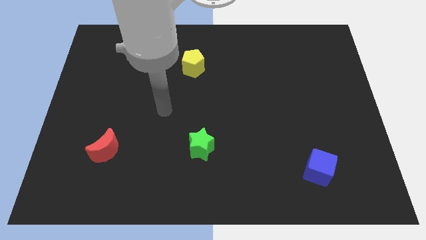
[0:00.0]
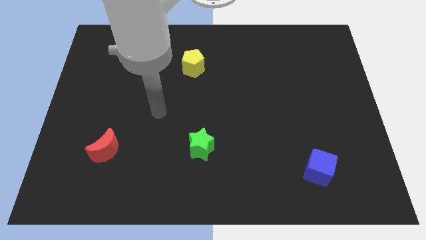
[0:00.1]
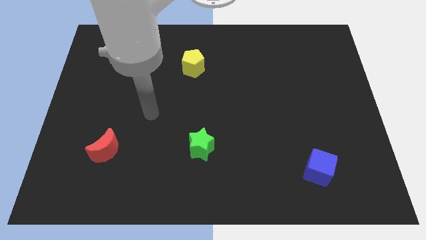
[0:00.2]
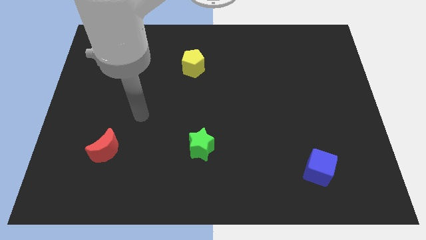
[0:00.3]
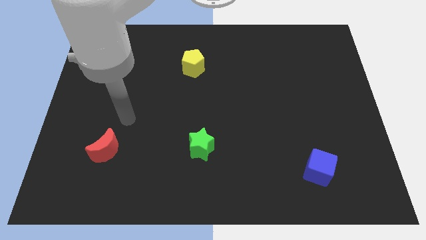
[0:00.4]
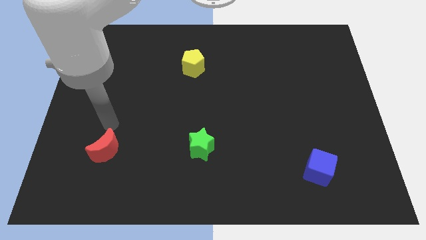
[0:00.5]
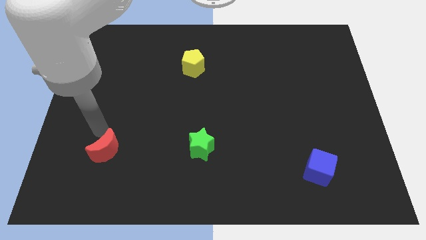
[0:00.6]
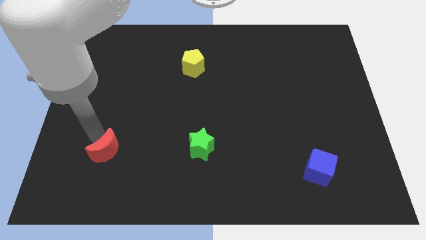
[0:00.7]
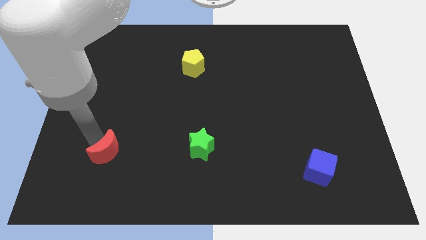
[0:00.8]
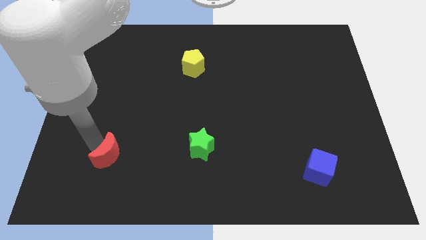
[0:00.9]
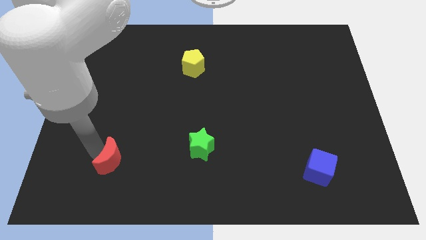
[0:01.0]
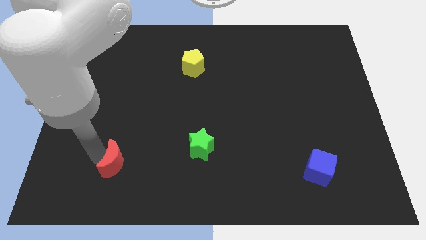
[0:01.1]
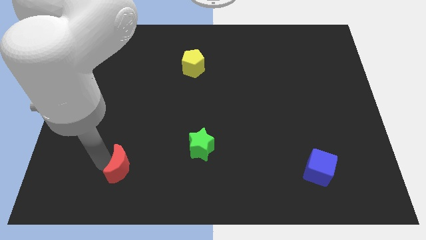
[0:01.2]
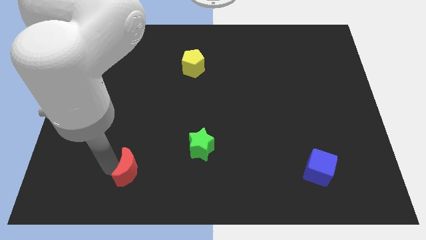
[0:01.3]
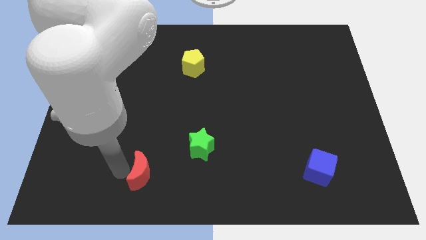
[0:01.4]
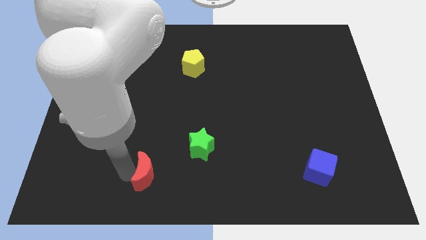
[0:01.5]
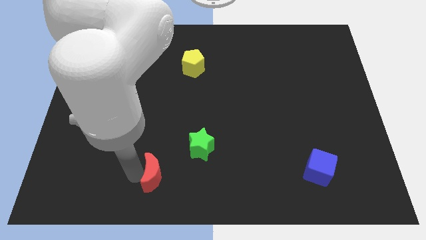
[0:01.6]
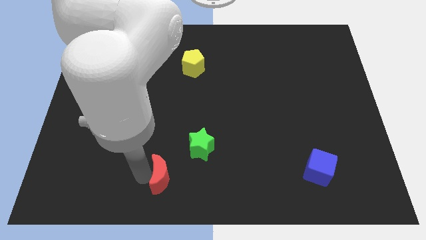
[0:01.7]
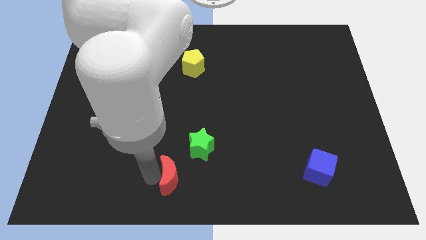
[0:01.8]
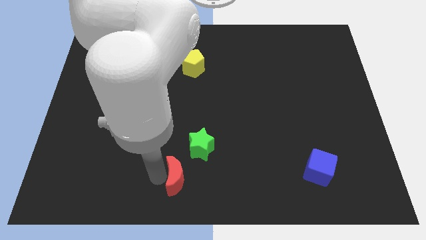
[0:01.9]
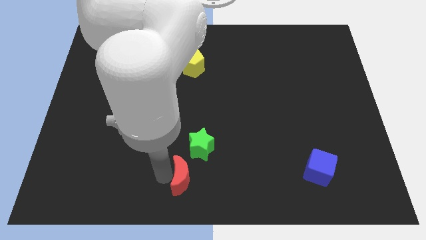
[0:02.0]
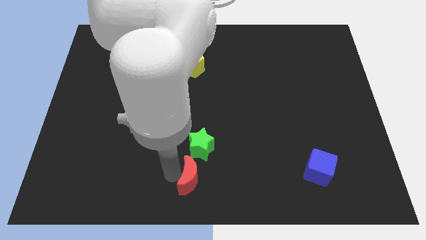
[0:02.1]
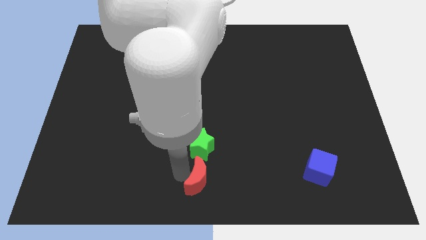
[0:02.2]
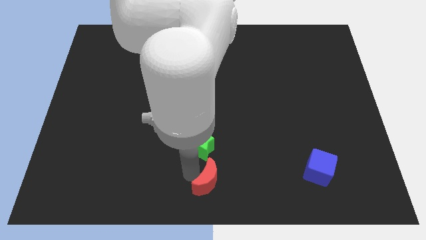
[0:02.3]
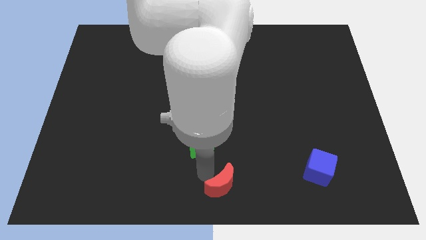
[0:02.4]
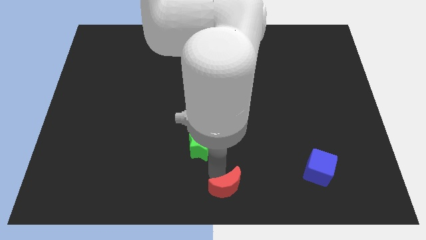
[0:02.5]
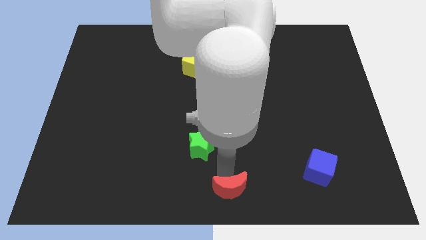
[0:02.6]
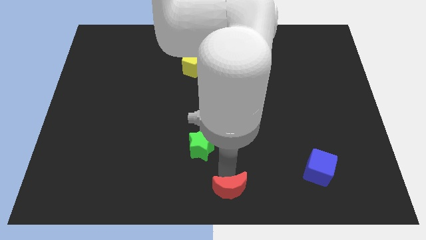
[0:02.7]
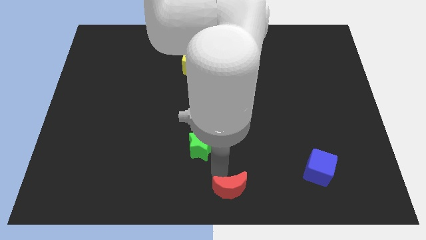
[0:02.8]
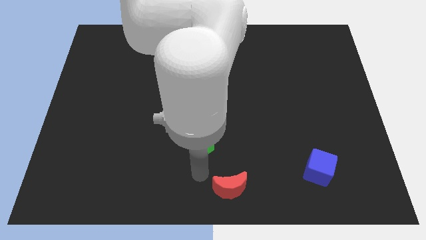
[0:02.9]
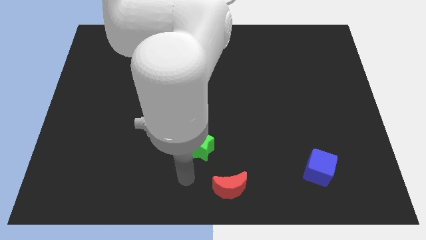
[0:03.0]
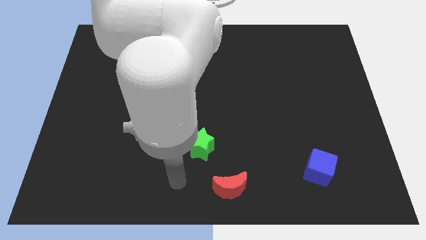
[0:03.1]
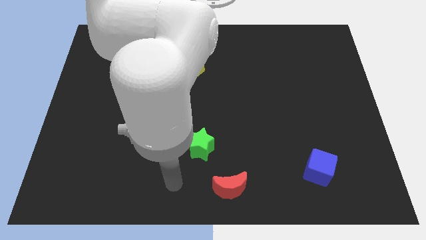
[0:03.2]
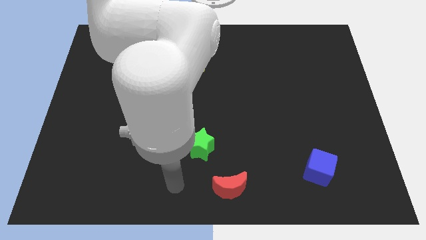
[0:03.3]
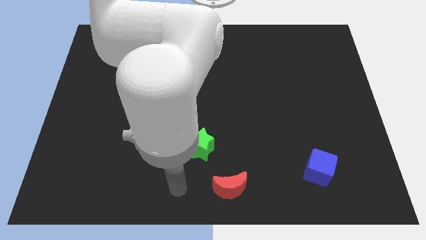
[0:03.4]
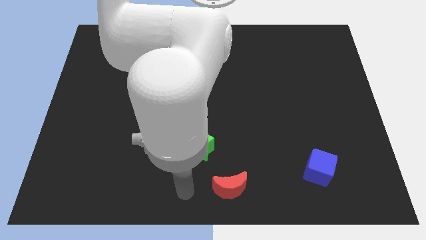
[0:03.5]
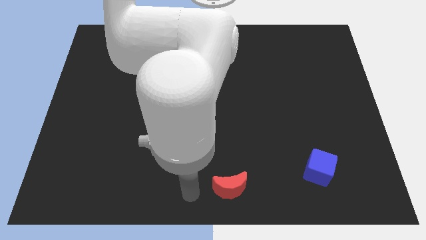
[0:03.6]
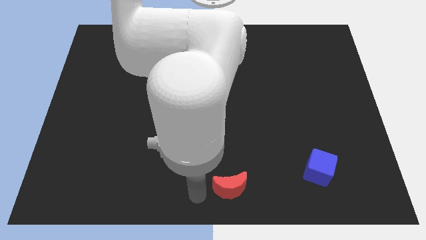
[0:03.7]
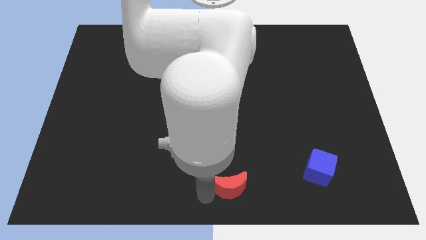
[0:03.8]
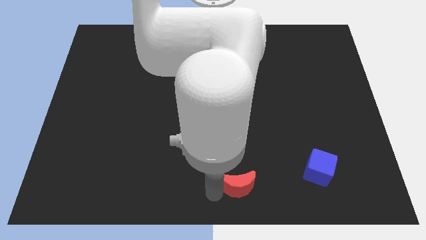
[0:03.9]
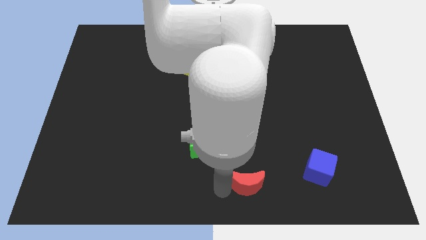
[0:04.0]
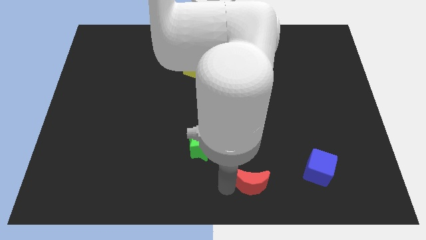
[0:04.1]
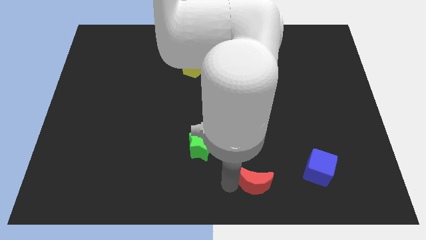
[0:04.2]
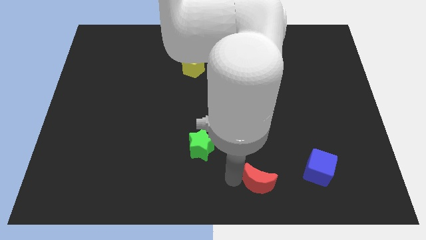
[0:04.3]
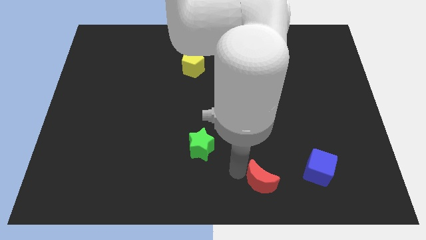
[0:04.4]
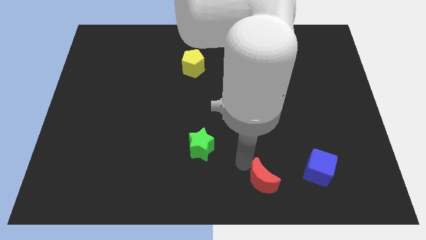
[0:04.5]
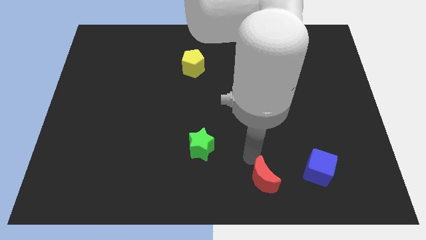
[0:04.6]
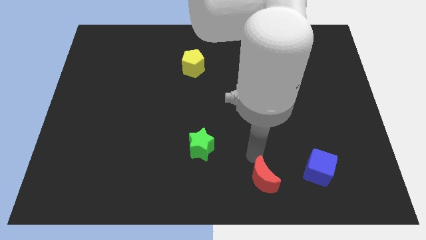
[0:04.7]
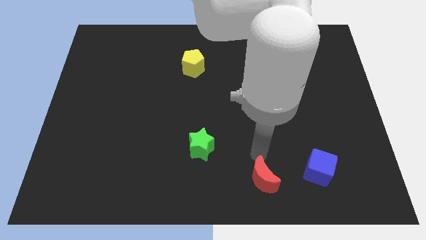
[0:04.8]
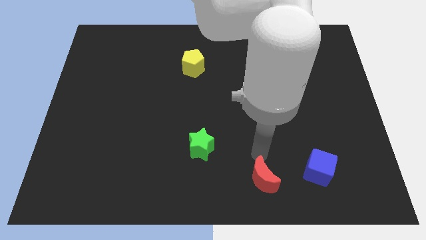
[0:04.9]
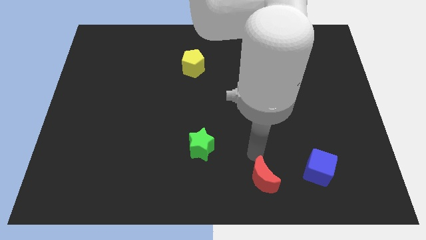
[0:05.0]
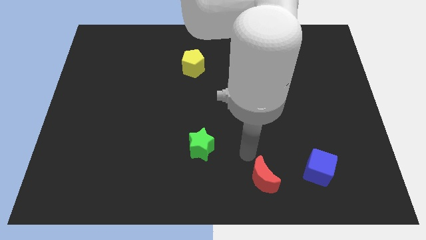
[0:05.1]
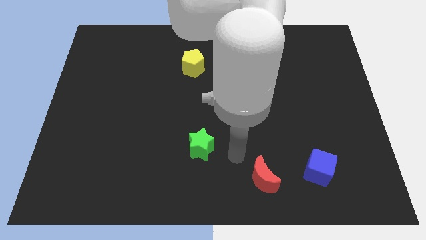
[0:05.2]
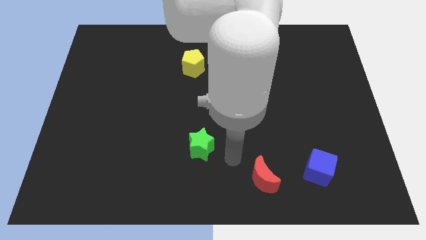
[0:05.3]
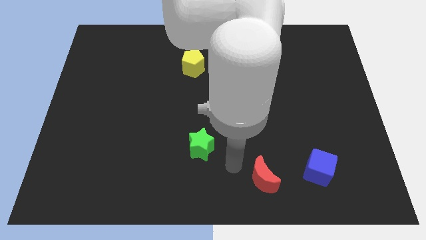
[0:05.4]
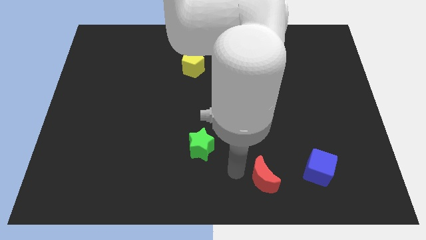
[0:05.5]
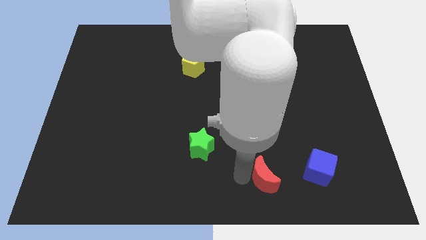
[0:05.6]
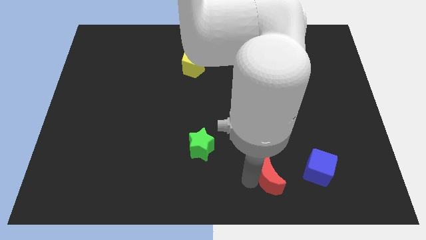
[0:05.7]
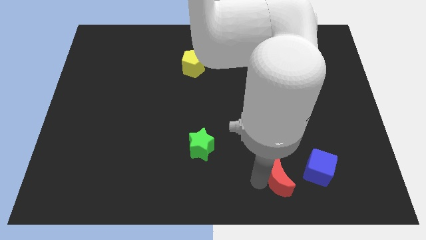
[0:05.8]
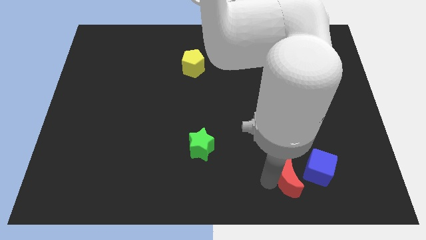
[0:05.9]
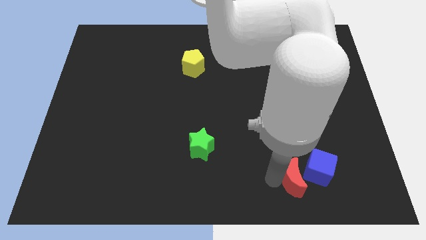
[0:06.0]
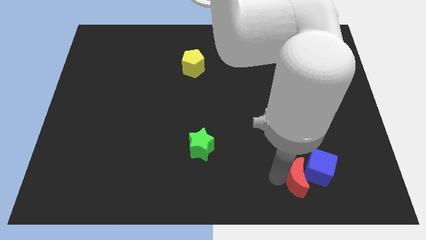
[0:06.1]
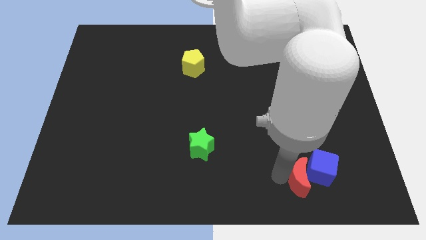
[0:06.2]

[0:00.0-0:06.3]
move the moon towards the blue block

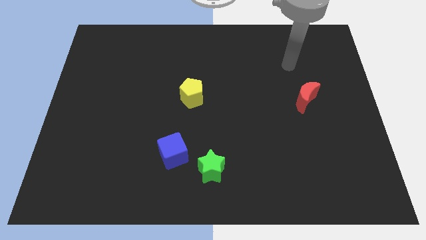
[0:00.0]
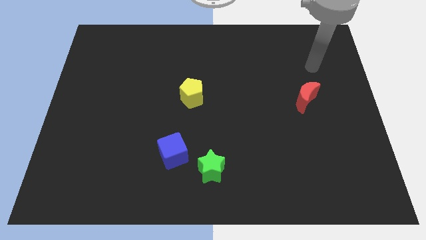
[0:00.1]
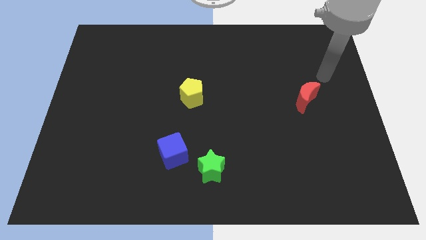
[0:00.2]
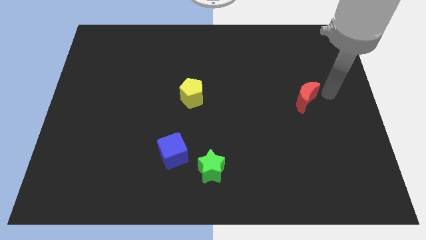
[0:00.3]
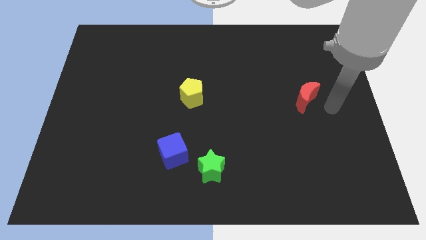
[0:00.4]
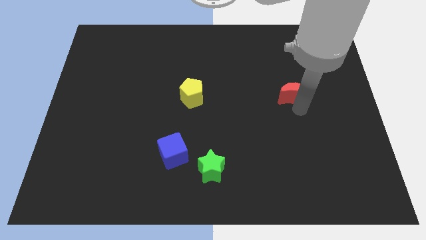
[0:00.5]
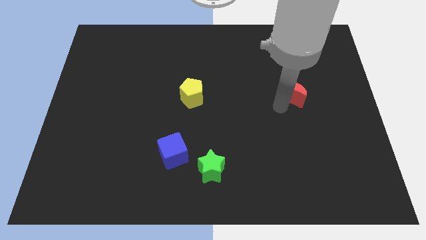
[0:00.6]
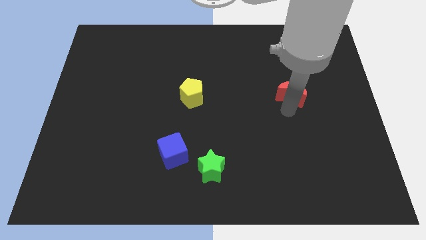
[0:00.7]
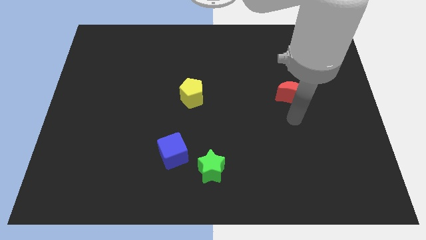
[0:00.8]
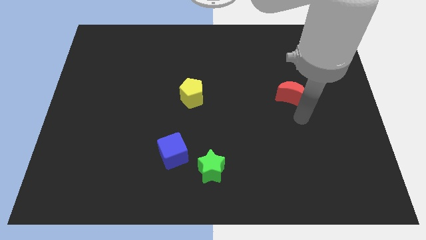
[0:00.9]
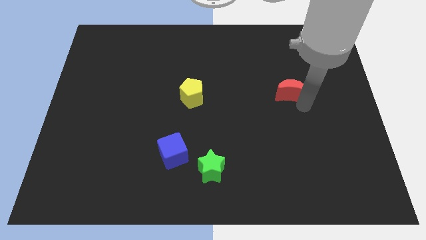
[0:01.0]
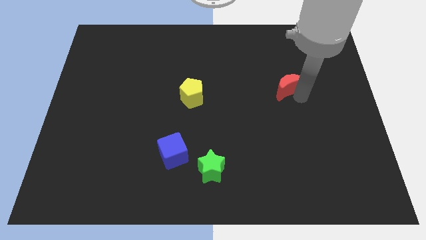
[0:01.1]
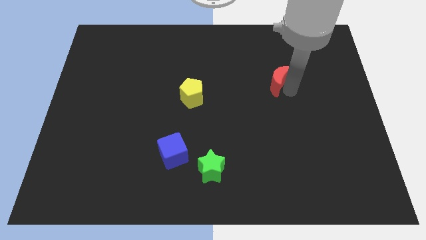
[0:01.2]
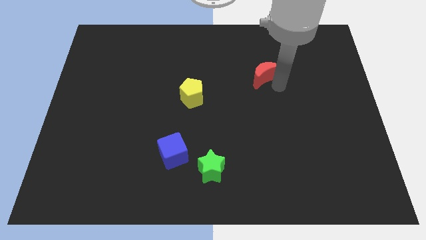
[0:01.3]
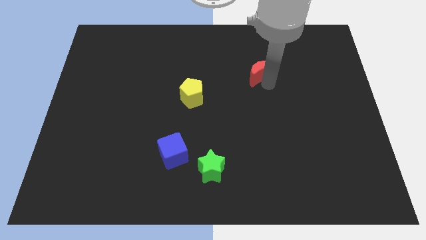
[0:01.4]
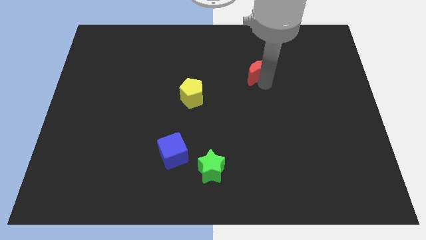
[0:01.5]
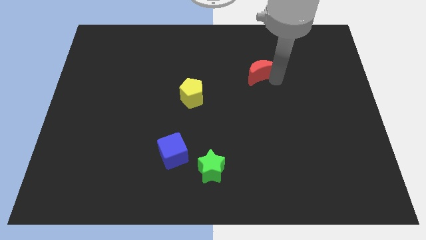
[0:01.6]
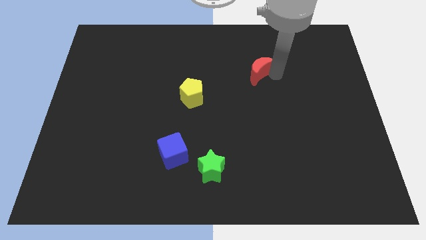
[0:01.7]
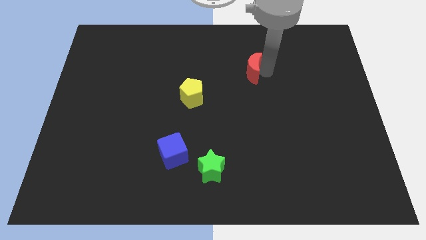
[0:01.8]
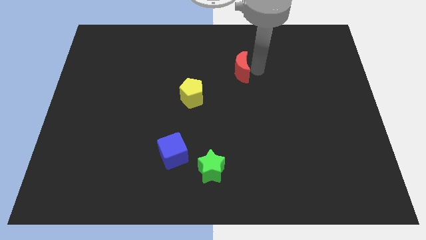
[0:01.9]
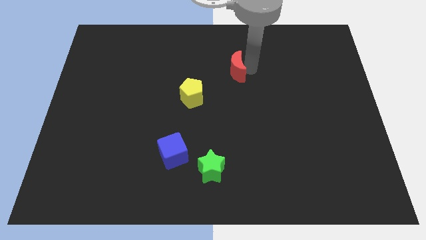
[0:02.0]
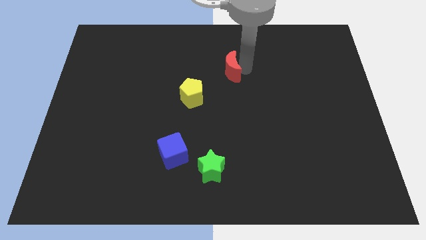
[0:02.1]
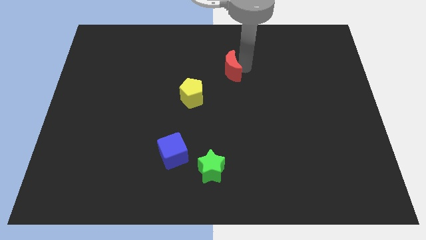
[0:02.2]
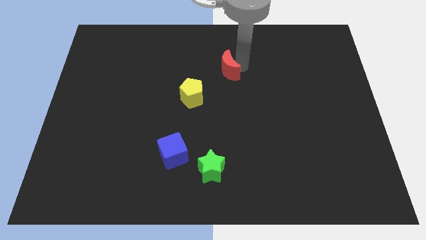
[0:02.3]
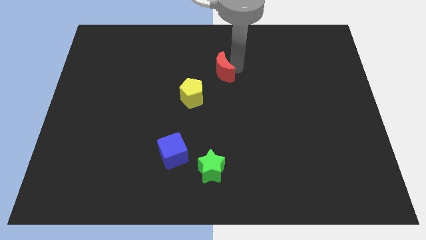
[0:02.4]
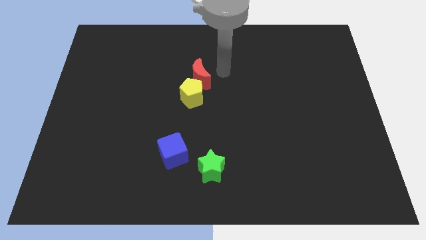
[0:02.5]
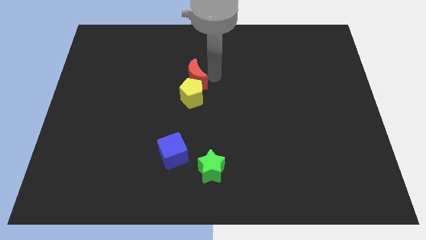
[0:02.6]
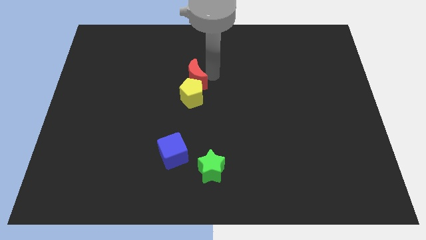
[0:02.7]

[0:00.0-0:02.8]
put the red moon close to the yellow block
